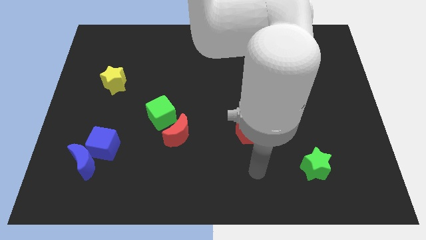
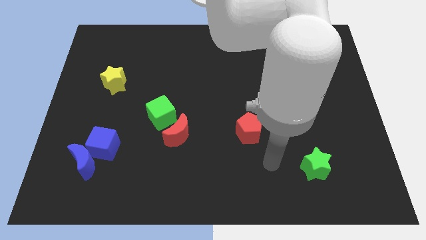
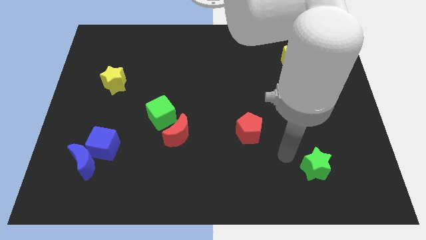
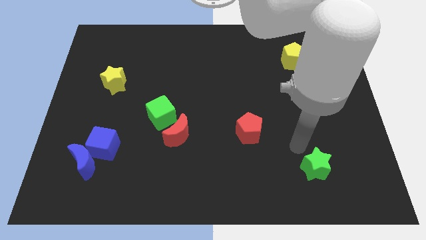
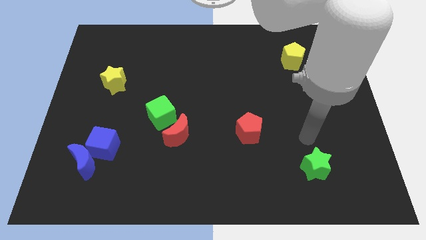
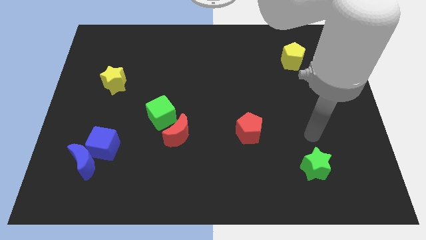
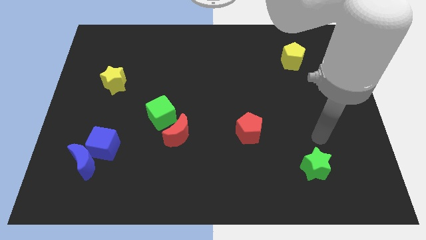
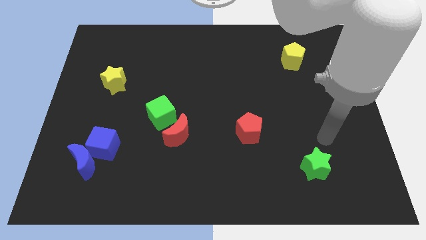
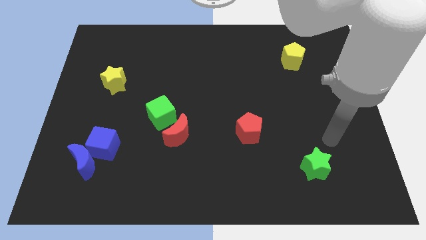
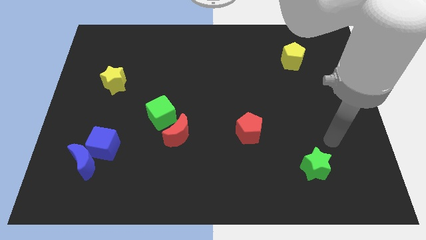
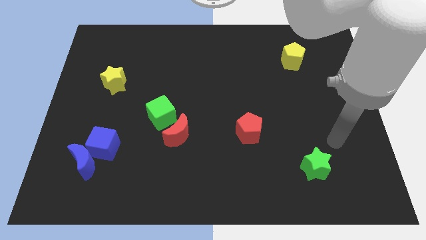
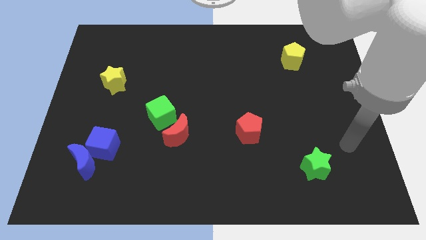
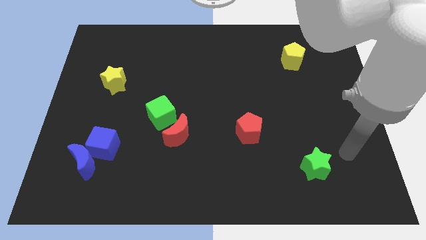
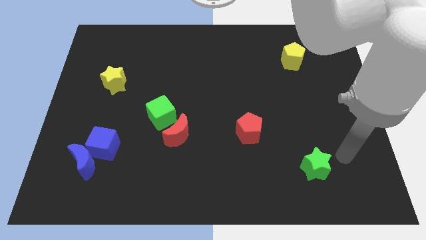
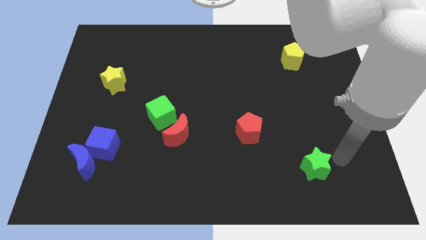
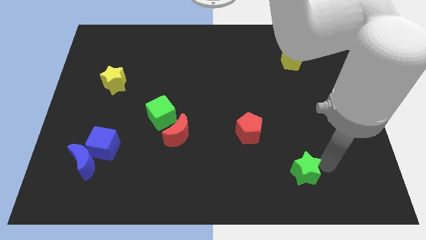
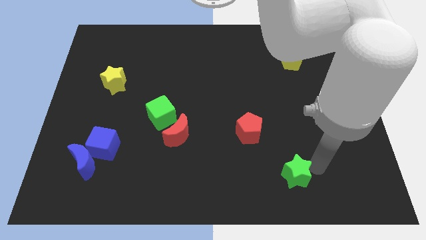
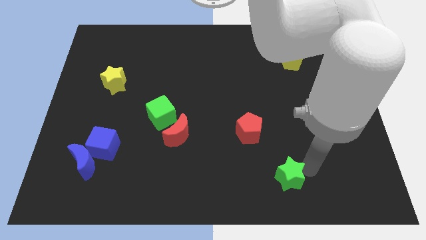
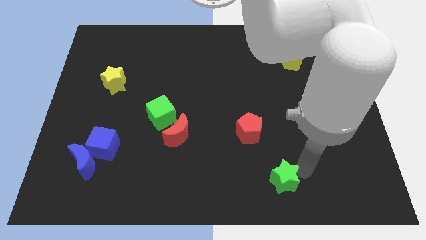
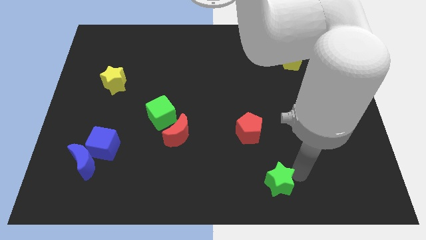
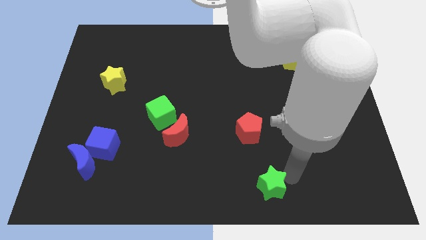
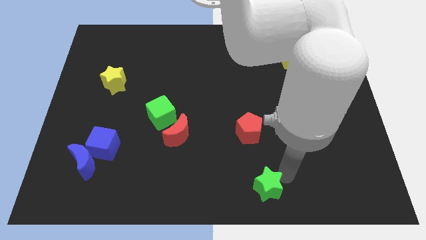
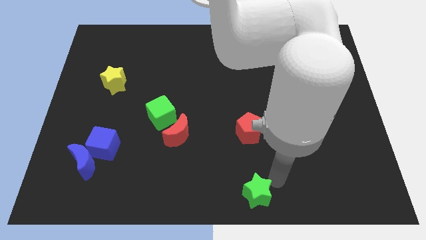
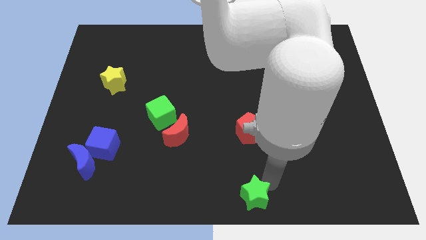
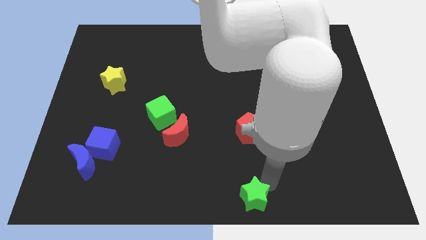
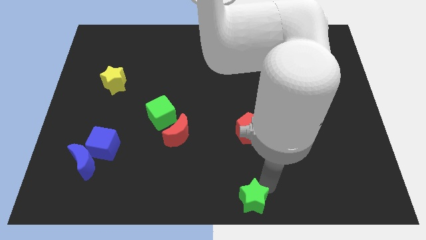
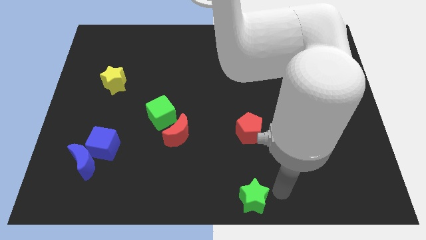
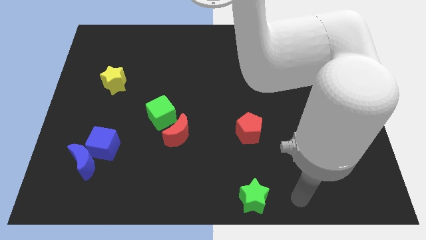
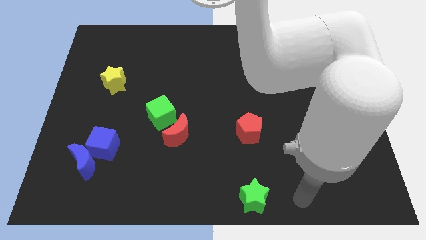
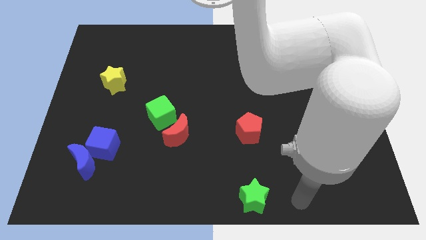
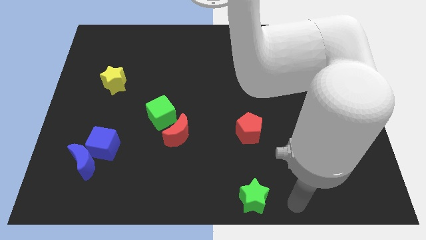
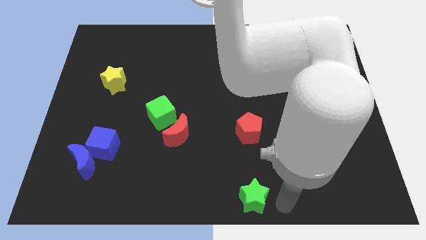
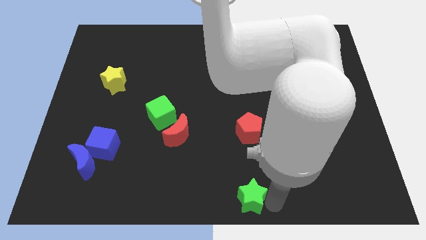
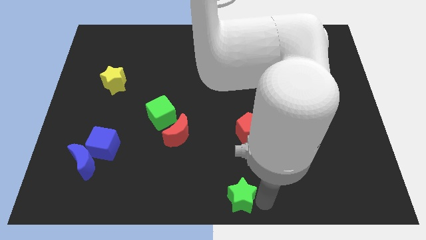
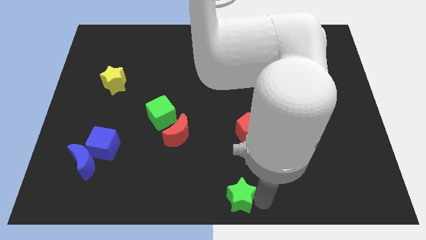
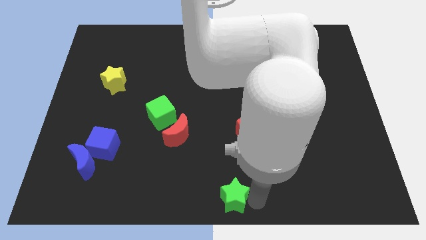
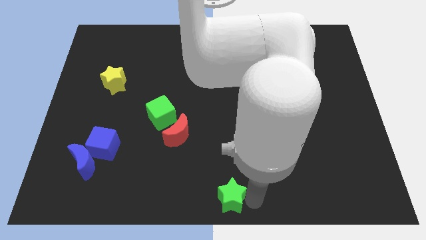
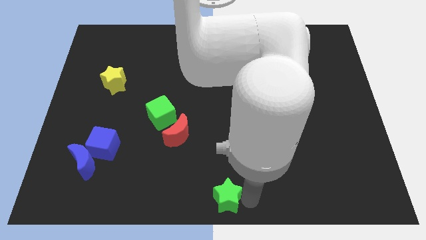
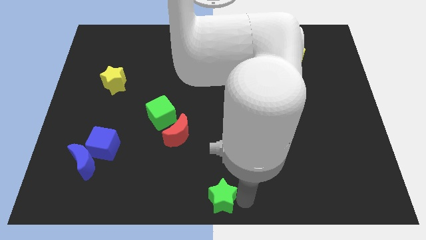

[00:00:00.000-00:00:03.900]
place the green star to the bottom center of the board

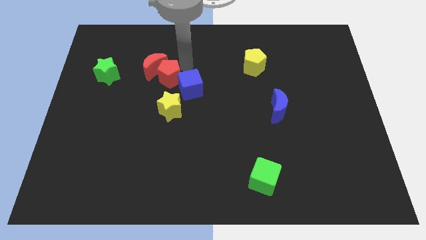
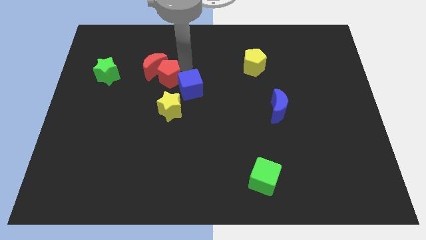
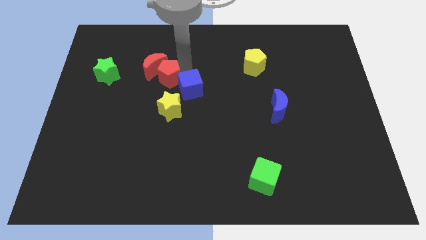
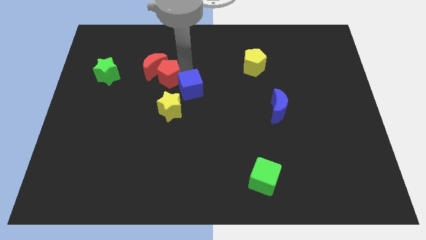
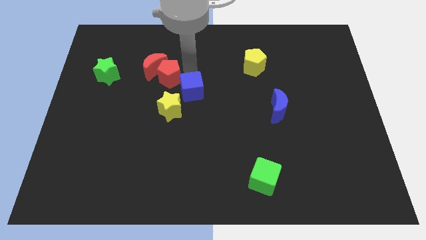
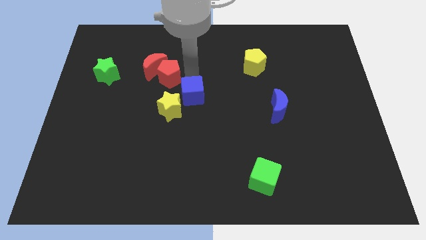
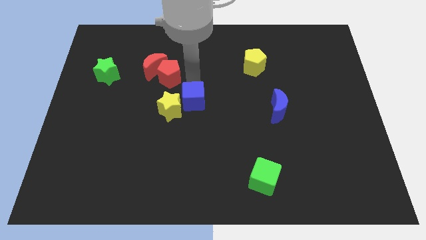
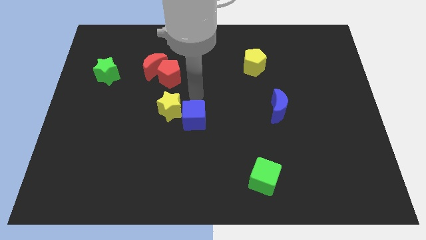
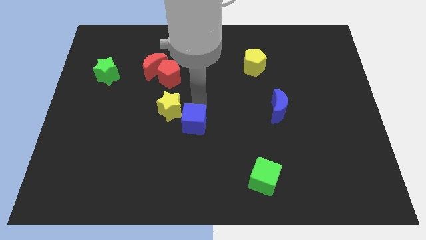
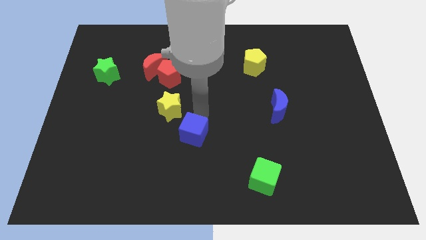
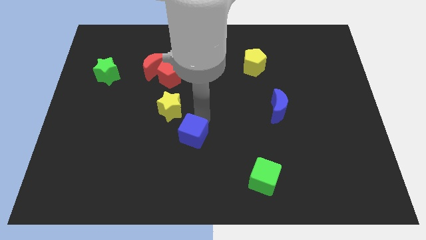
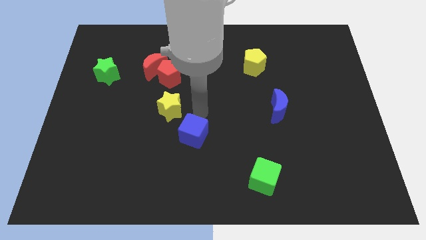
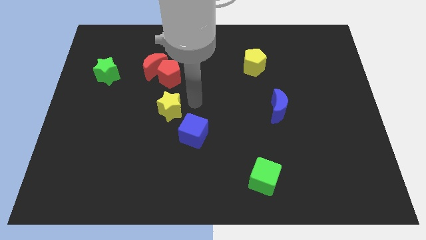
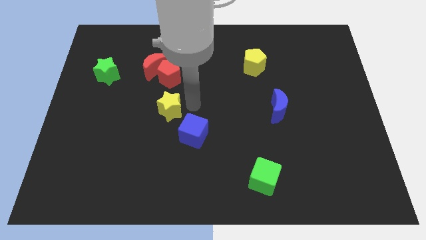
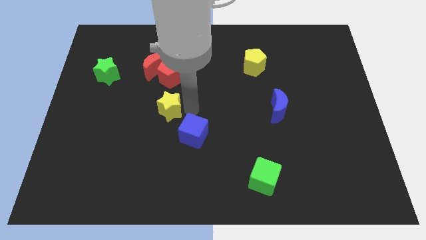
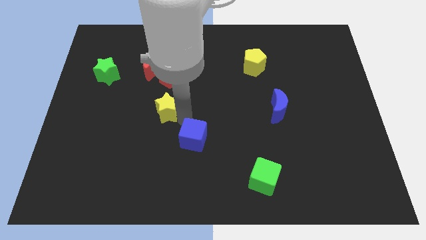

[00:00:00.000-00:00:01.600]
place the blue cube diagonally to green cube

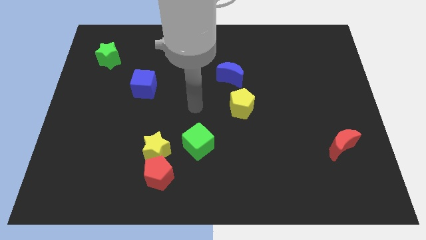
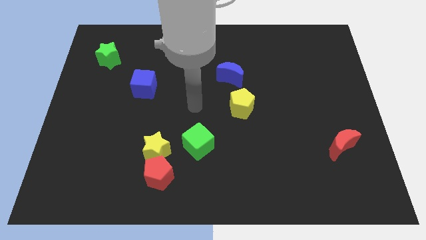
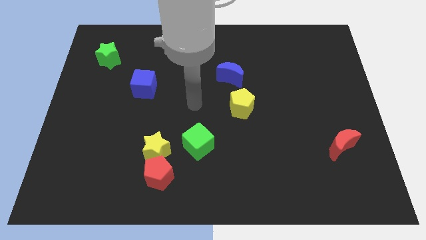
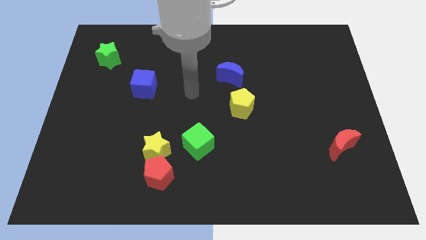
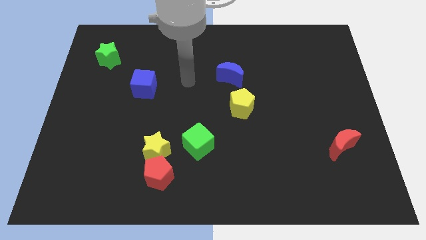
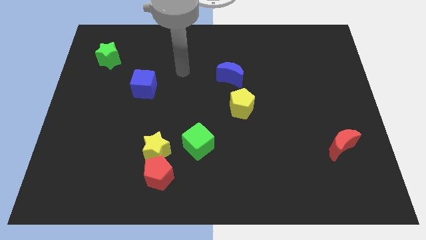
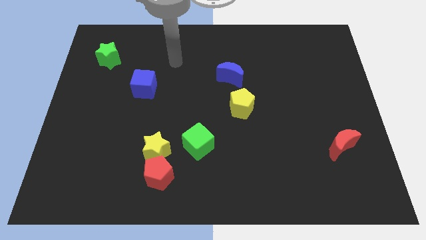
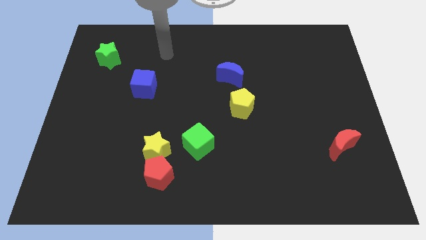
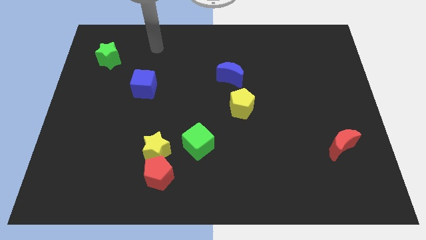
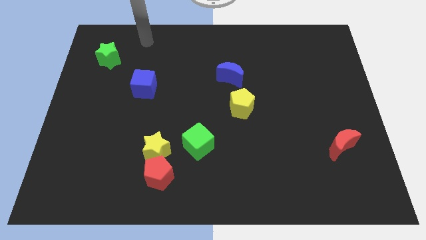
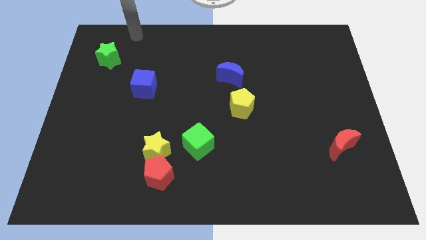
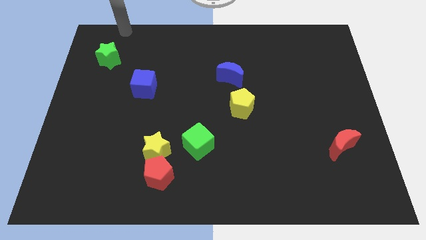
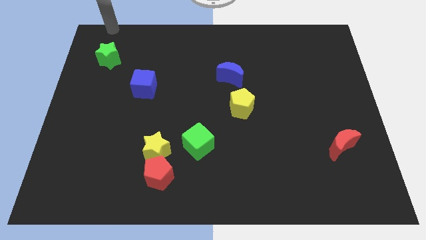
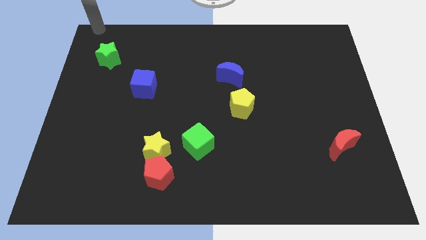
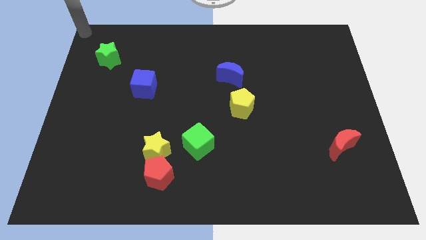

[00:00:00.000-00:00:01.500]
move your arm to the top left

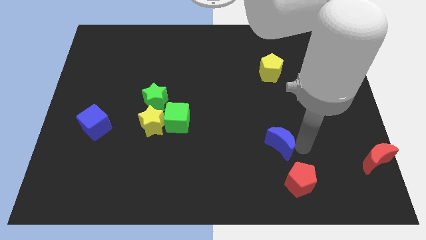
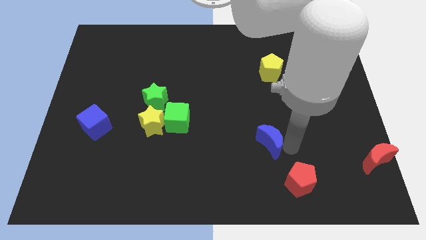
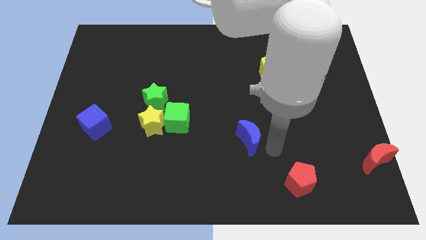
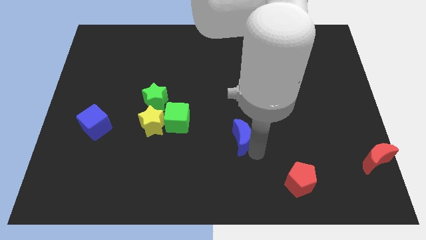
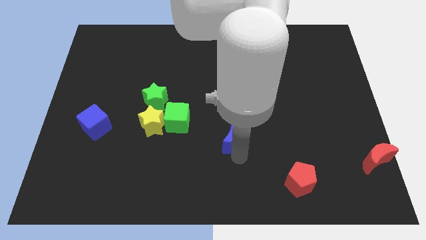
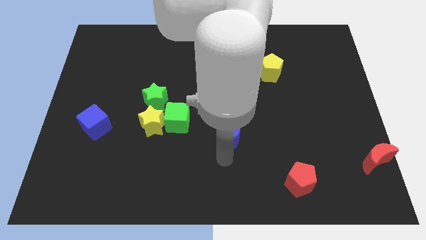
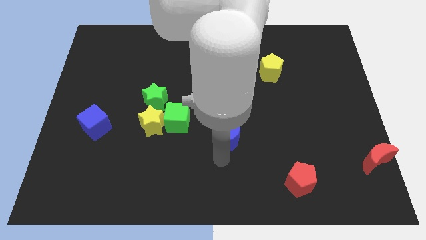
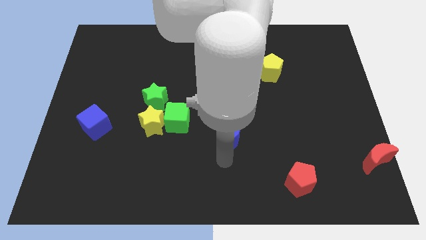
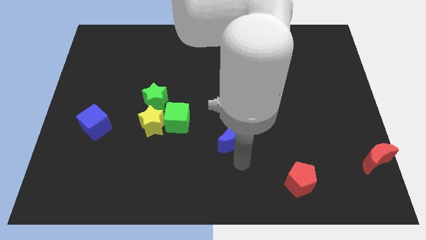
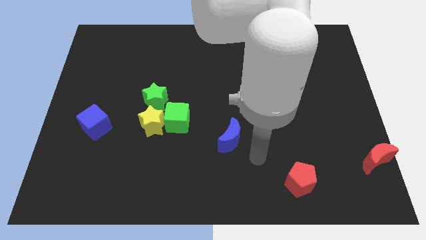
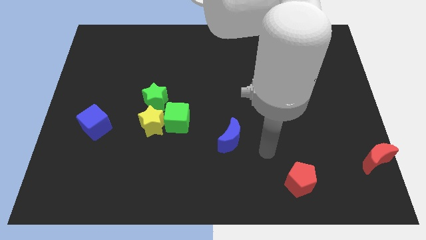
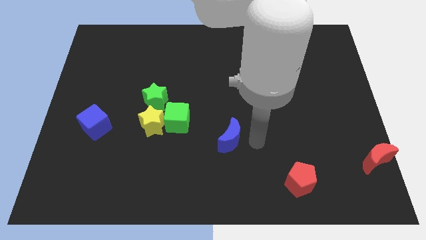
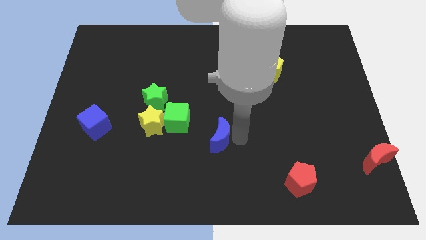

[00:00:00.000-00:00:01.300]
push the blue moon closer to the green cube

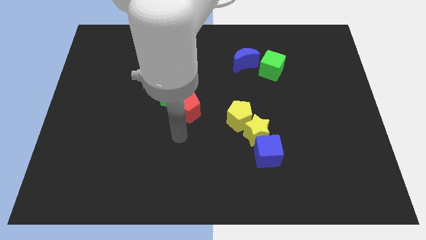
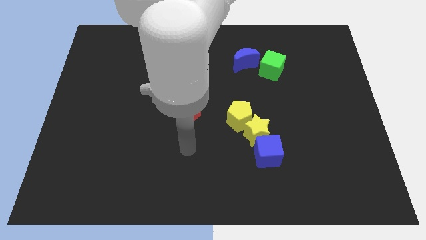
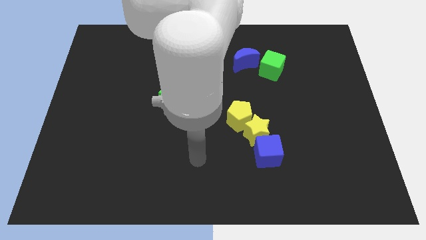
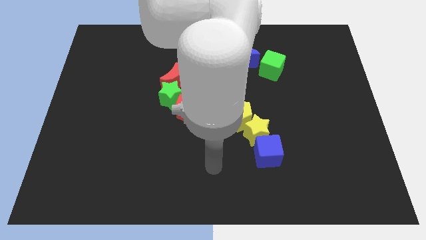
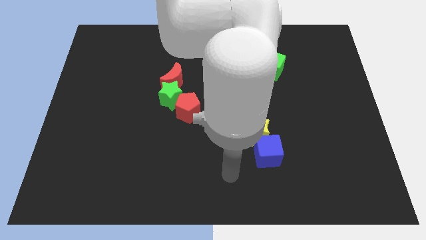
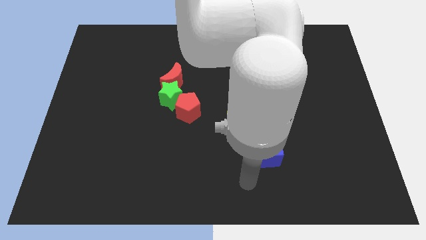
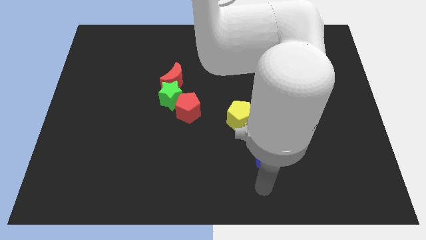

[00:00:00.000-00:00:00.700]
go away from the red pentagon
